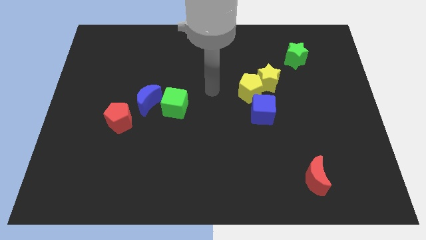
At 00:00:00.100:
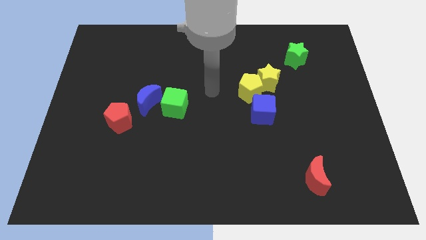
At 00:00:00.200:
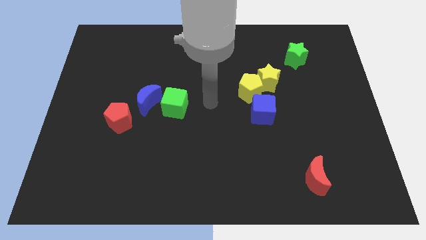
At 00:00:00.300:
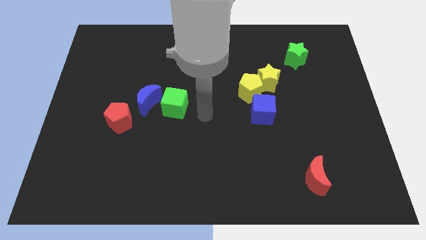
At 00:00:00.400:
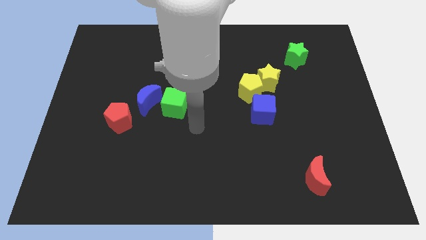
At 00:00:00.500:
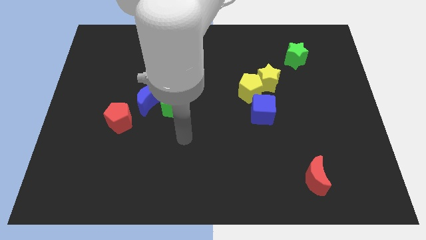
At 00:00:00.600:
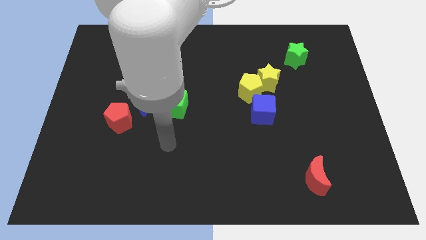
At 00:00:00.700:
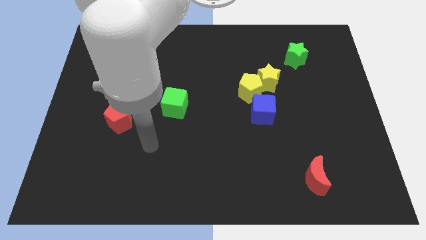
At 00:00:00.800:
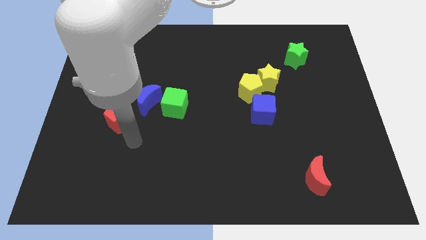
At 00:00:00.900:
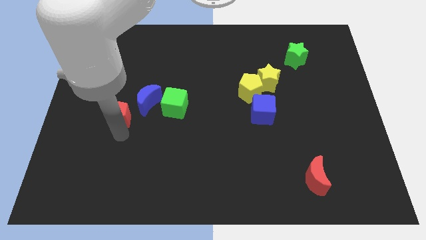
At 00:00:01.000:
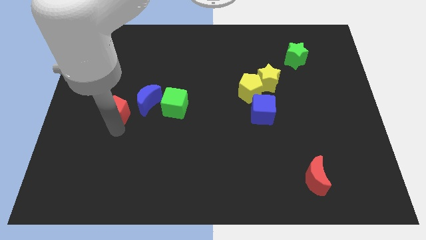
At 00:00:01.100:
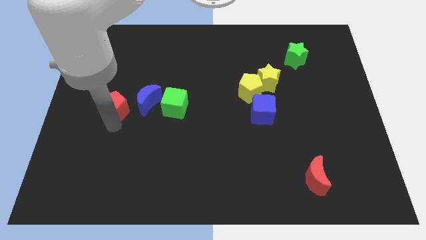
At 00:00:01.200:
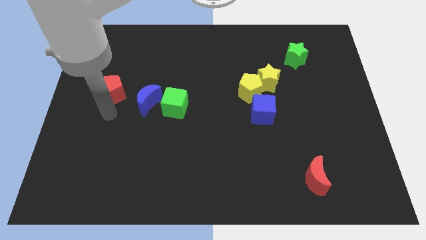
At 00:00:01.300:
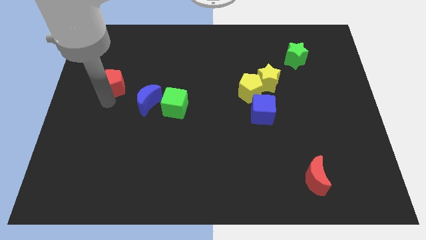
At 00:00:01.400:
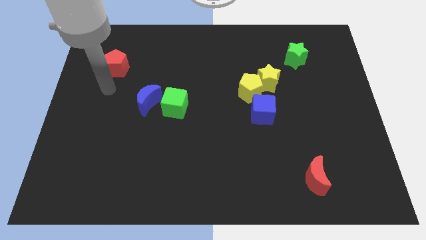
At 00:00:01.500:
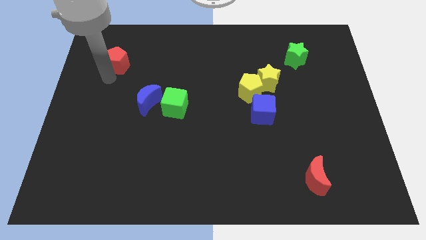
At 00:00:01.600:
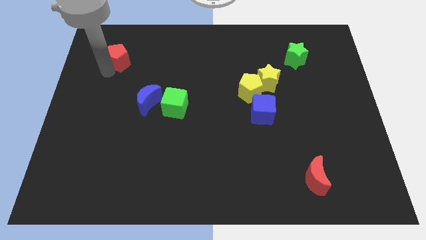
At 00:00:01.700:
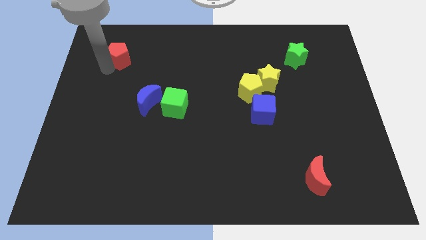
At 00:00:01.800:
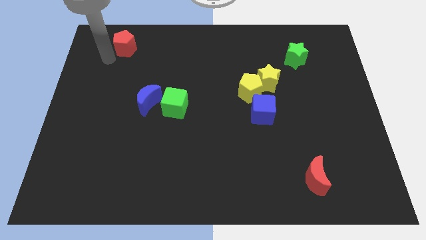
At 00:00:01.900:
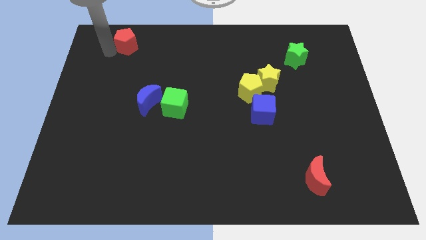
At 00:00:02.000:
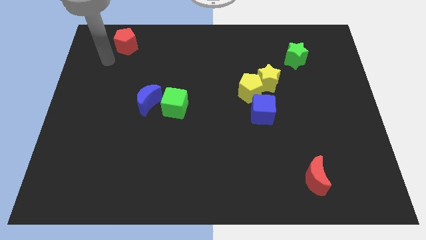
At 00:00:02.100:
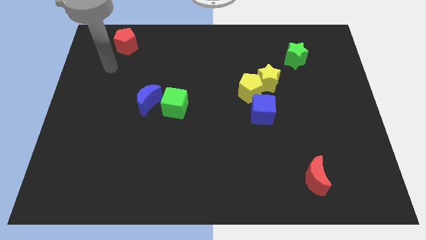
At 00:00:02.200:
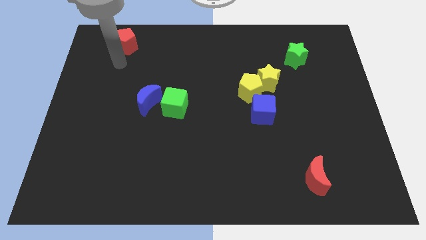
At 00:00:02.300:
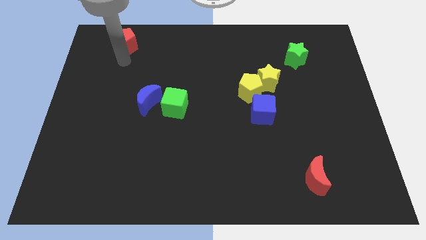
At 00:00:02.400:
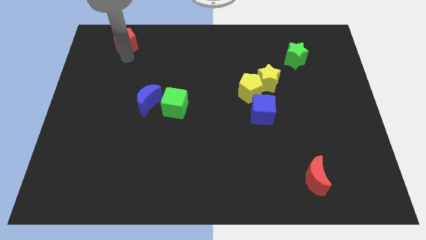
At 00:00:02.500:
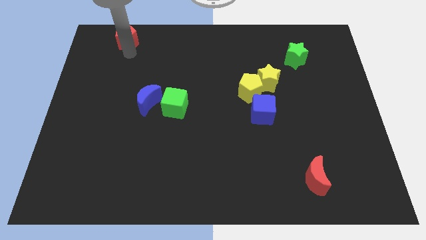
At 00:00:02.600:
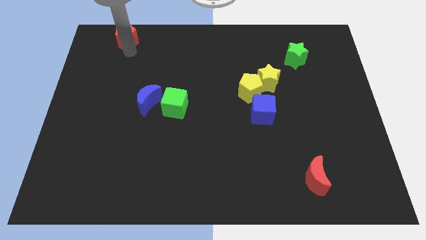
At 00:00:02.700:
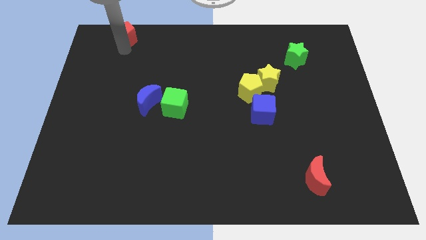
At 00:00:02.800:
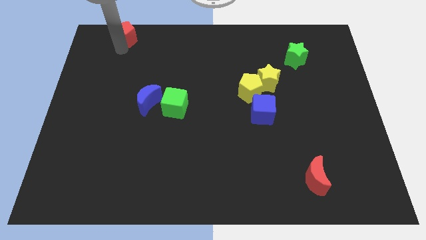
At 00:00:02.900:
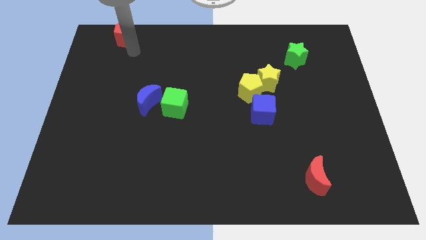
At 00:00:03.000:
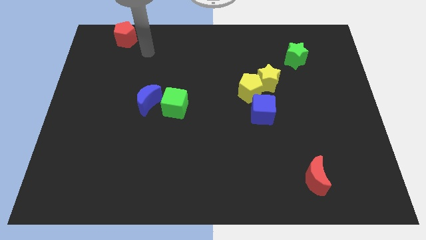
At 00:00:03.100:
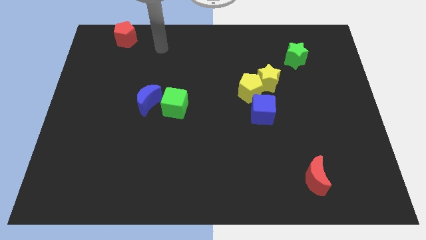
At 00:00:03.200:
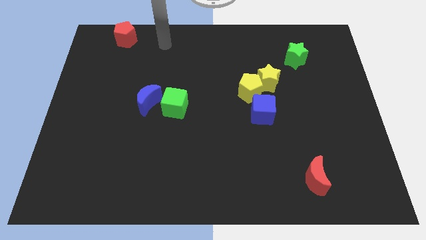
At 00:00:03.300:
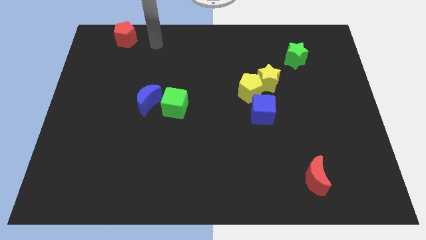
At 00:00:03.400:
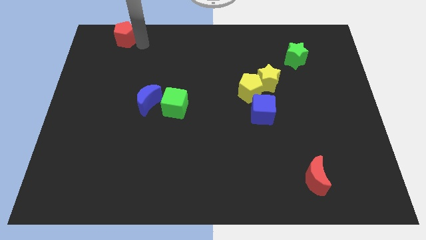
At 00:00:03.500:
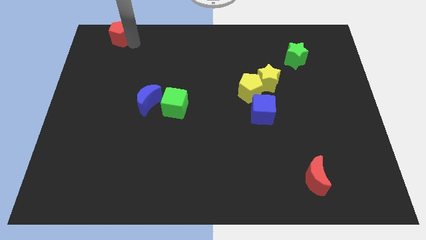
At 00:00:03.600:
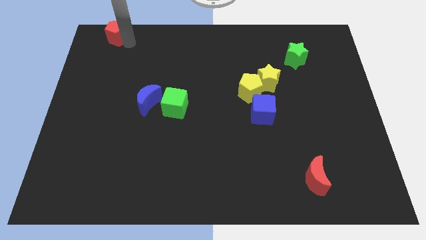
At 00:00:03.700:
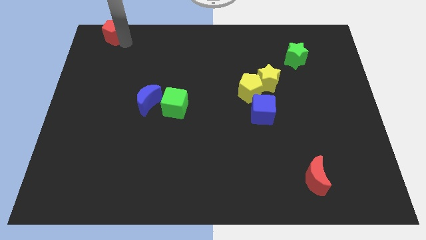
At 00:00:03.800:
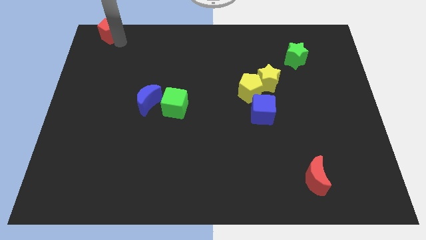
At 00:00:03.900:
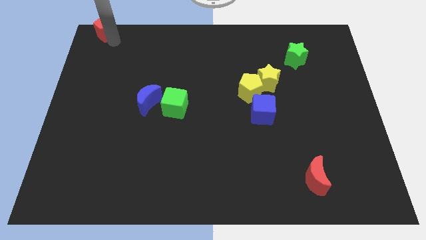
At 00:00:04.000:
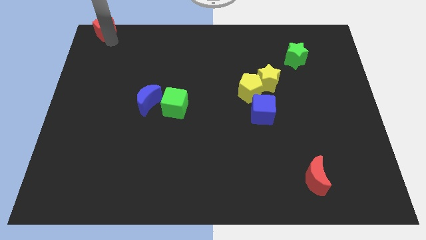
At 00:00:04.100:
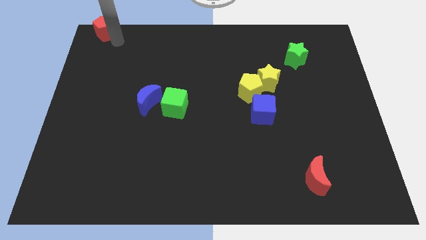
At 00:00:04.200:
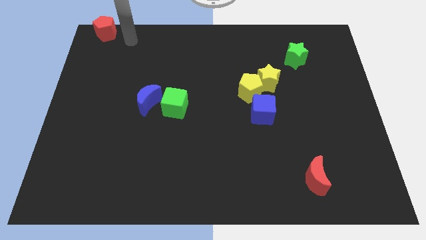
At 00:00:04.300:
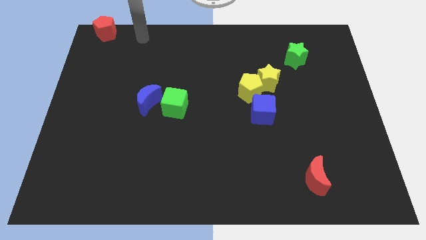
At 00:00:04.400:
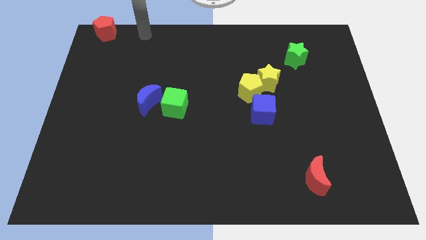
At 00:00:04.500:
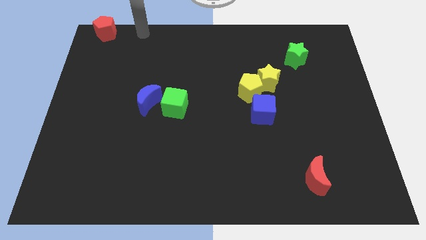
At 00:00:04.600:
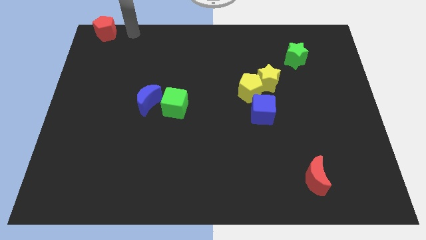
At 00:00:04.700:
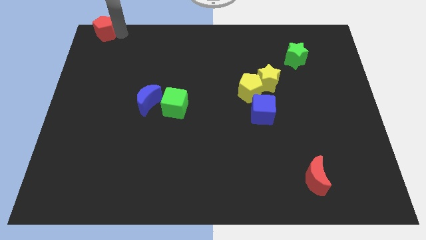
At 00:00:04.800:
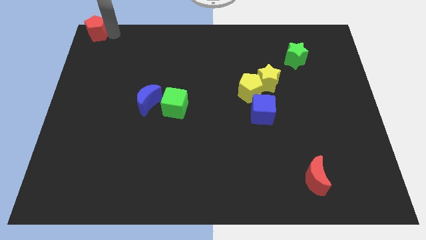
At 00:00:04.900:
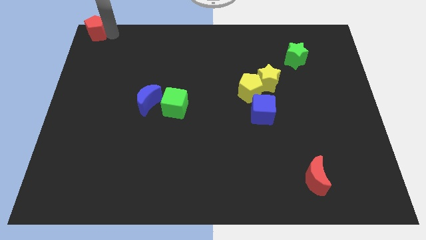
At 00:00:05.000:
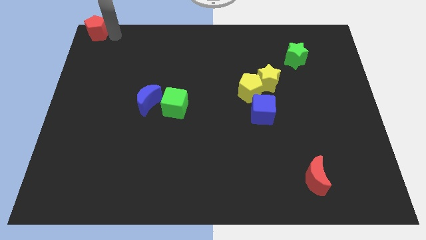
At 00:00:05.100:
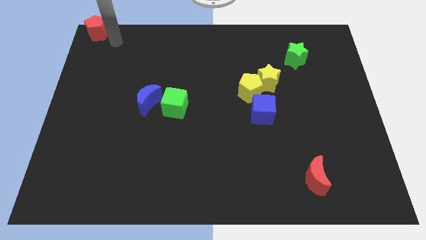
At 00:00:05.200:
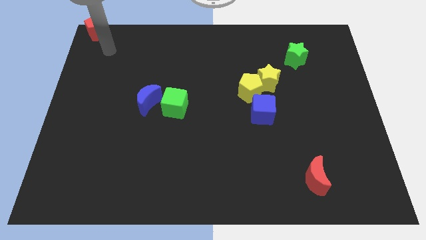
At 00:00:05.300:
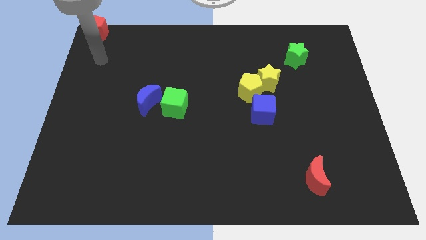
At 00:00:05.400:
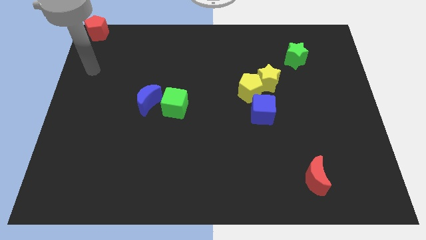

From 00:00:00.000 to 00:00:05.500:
move the red pentagon to the top left corner of the board

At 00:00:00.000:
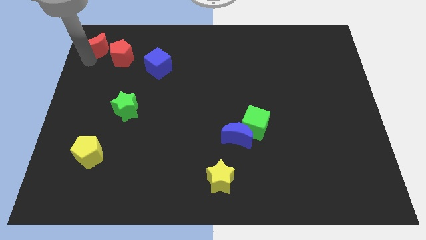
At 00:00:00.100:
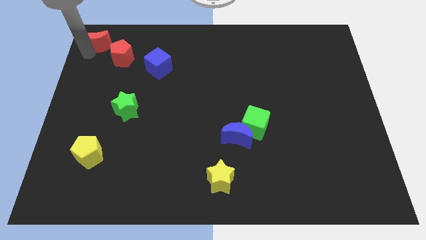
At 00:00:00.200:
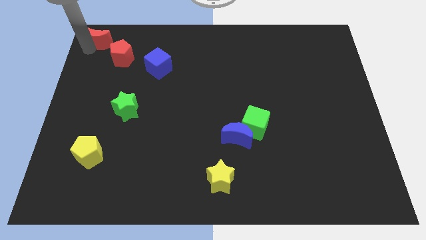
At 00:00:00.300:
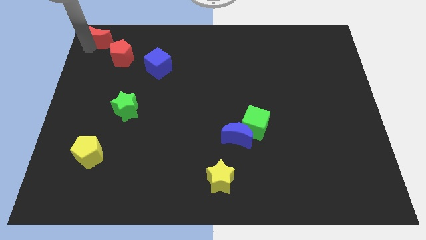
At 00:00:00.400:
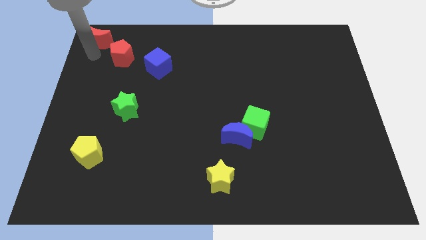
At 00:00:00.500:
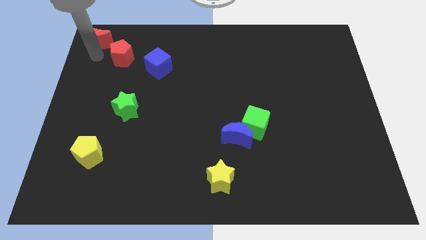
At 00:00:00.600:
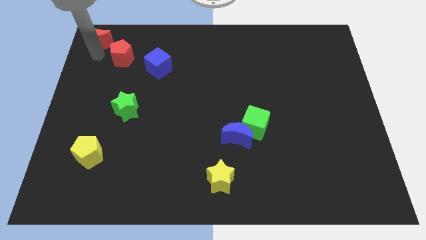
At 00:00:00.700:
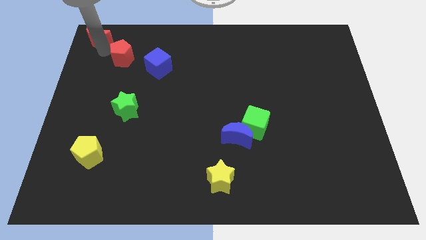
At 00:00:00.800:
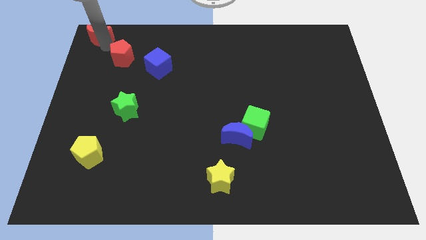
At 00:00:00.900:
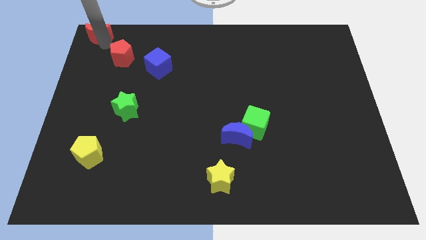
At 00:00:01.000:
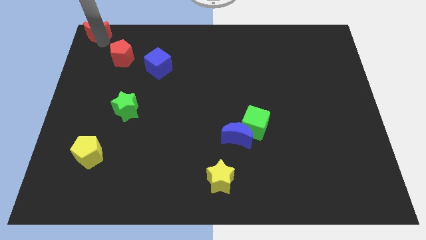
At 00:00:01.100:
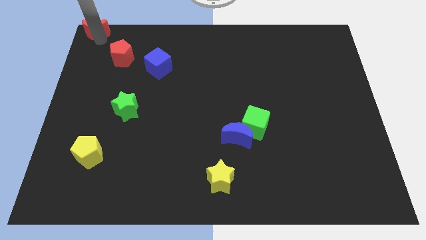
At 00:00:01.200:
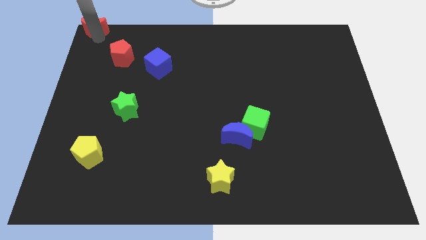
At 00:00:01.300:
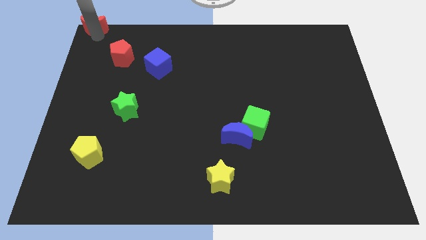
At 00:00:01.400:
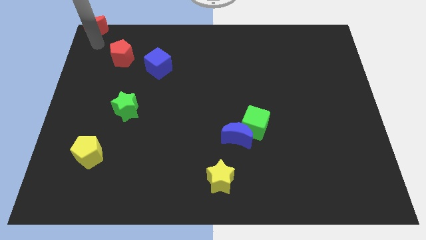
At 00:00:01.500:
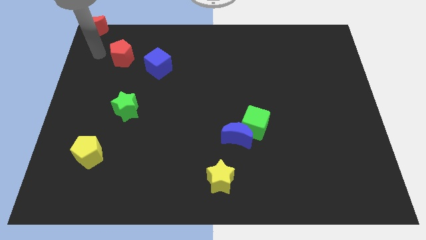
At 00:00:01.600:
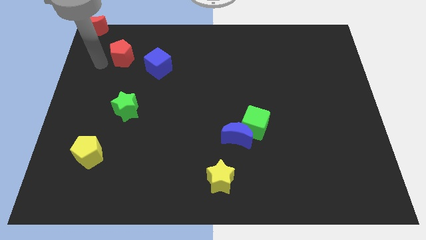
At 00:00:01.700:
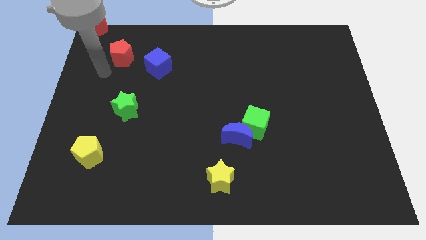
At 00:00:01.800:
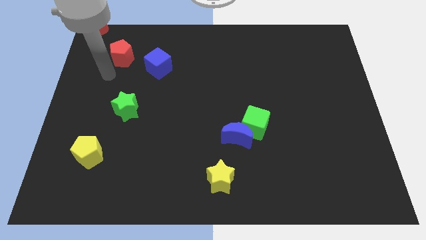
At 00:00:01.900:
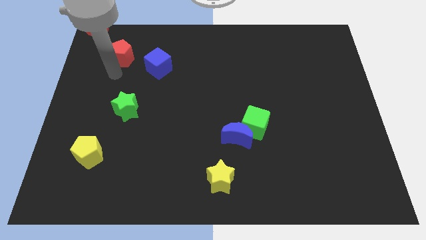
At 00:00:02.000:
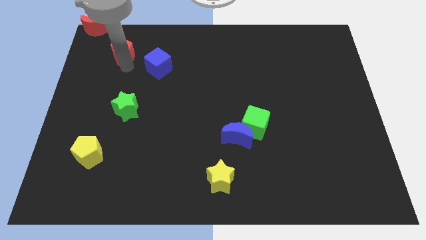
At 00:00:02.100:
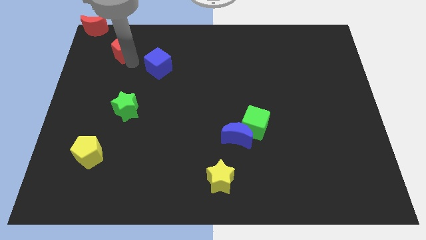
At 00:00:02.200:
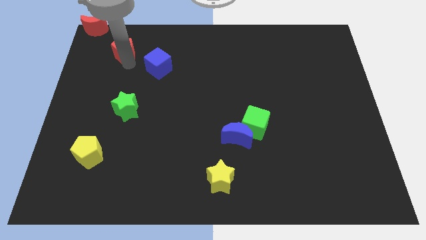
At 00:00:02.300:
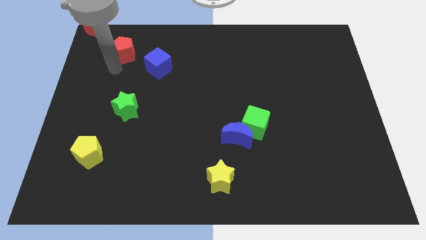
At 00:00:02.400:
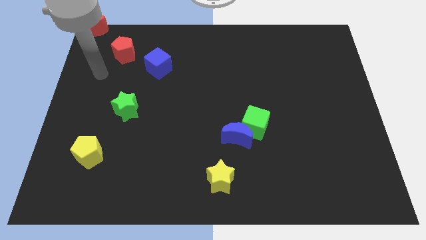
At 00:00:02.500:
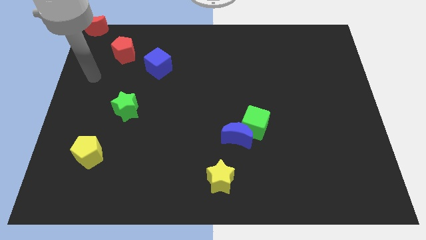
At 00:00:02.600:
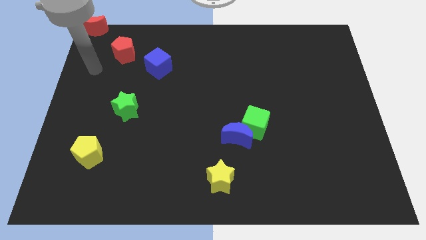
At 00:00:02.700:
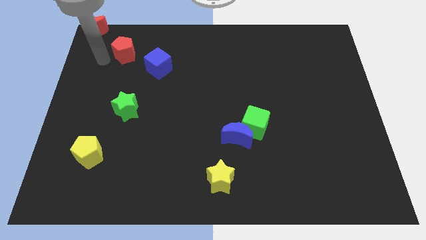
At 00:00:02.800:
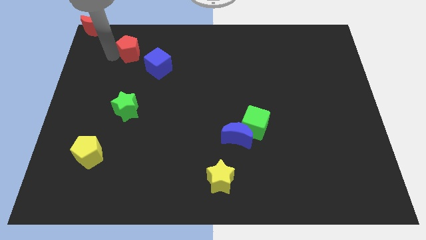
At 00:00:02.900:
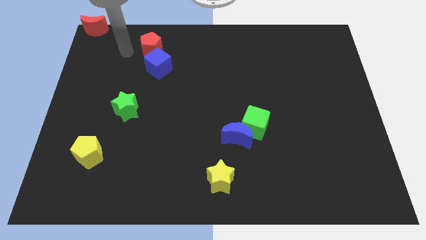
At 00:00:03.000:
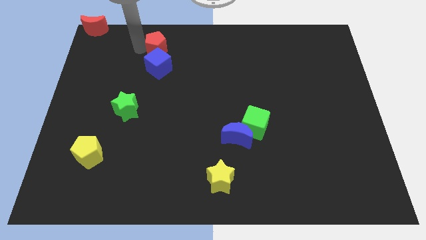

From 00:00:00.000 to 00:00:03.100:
place red pentagon above the blue cube

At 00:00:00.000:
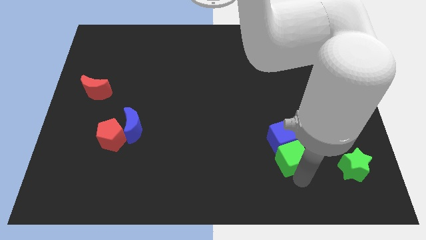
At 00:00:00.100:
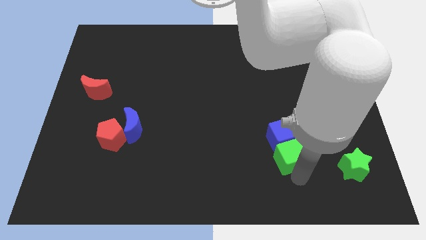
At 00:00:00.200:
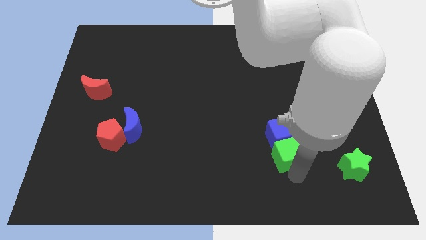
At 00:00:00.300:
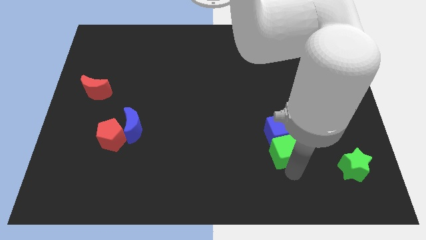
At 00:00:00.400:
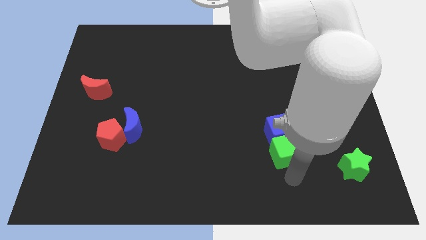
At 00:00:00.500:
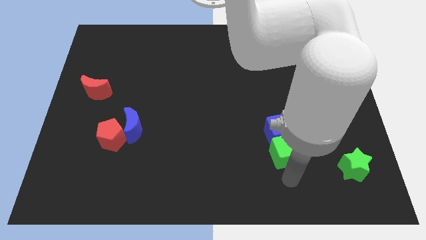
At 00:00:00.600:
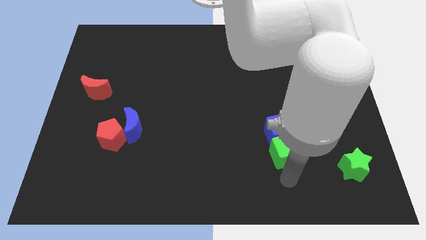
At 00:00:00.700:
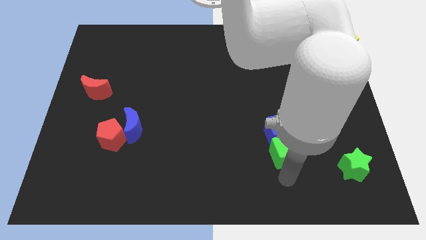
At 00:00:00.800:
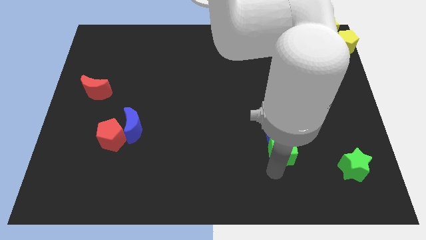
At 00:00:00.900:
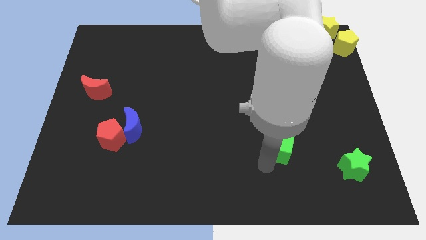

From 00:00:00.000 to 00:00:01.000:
move both the cubes slightly up
